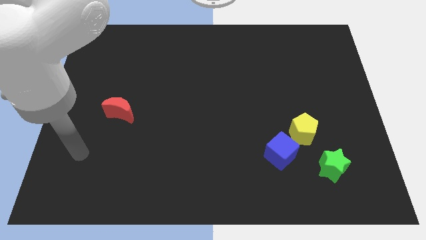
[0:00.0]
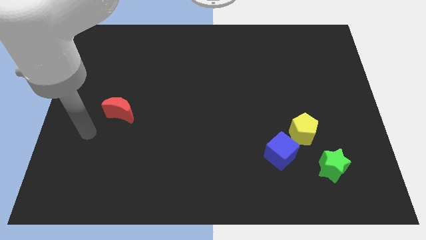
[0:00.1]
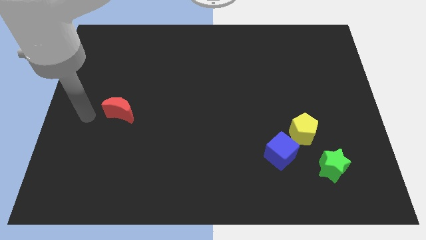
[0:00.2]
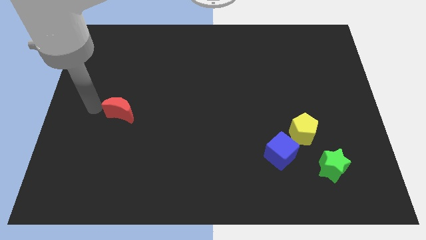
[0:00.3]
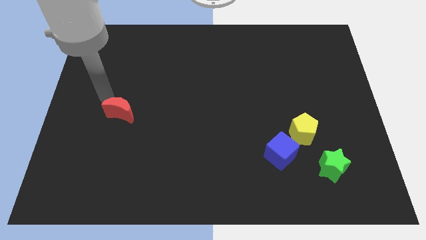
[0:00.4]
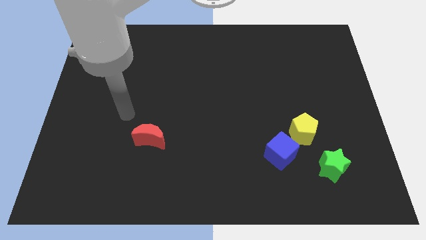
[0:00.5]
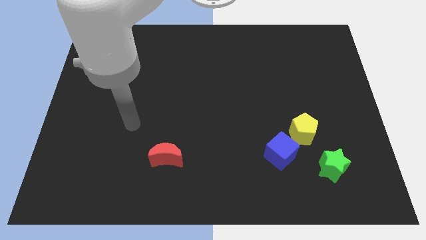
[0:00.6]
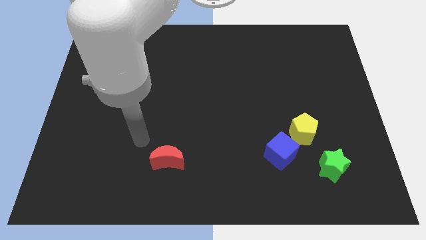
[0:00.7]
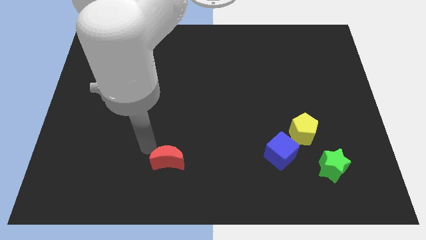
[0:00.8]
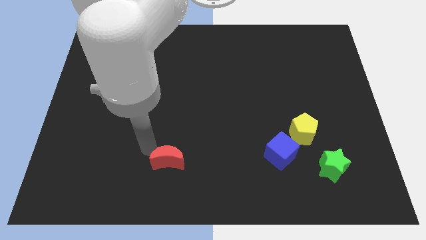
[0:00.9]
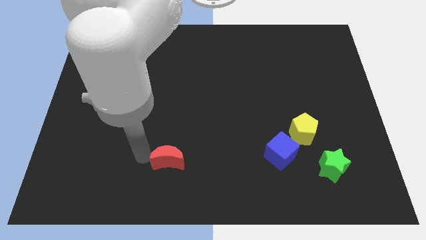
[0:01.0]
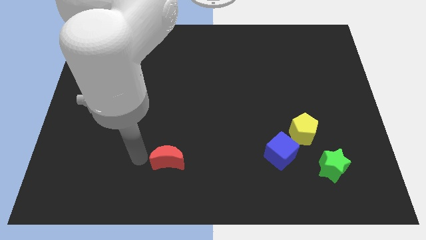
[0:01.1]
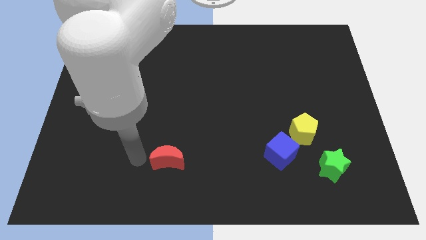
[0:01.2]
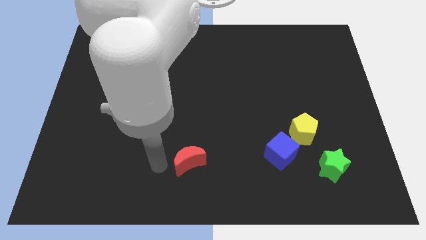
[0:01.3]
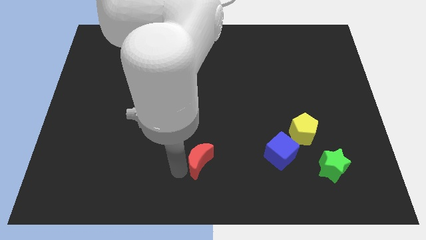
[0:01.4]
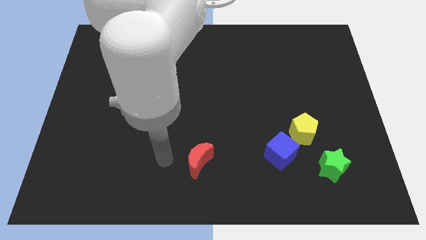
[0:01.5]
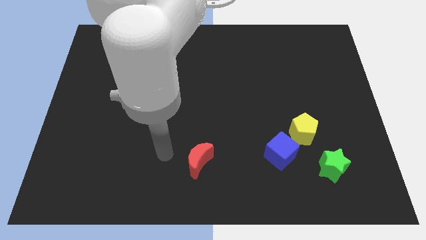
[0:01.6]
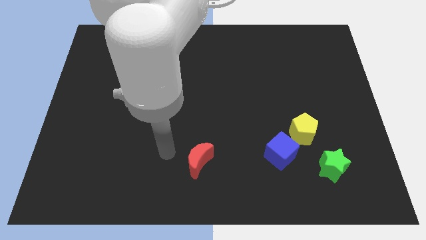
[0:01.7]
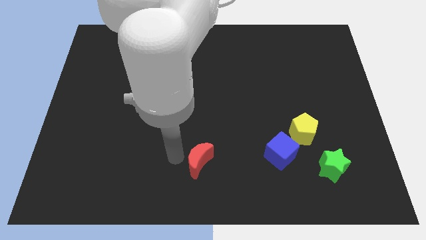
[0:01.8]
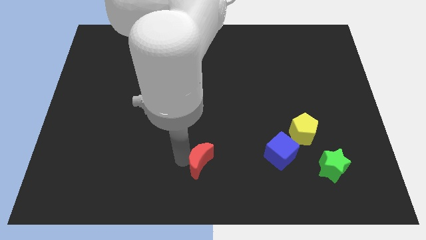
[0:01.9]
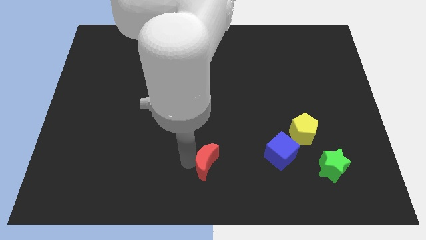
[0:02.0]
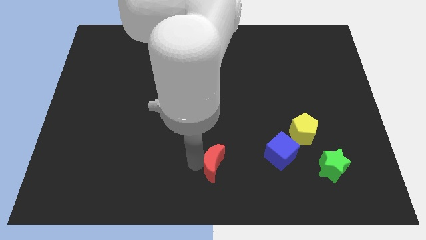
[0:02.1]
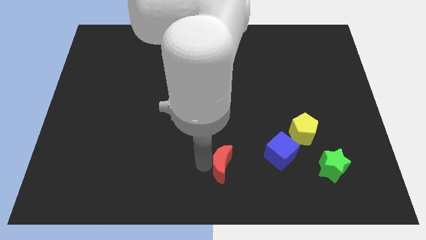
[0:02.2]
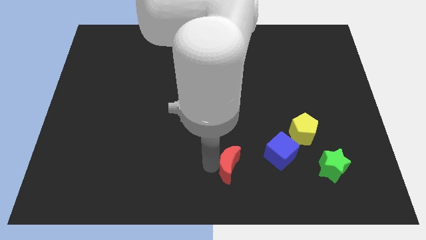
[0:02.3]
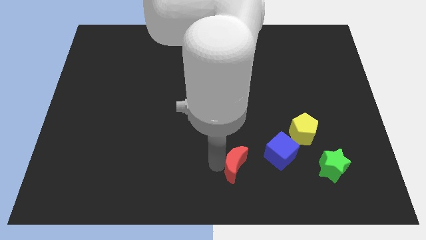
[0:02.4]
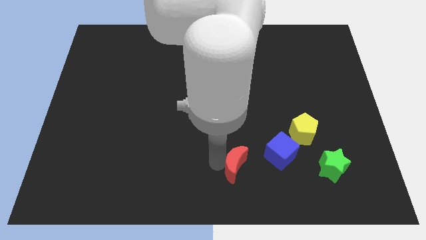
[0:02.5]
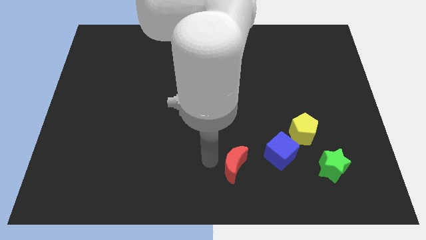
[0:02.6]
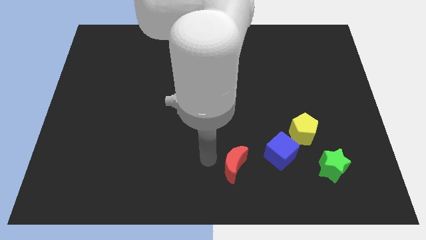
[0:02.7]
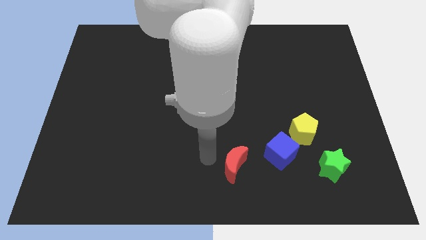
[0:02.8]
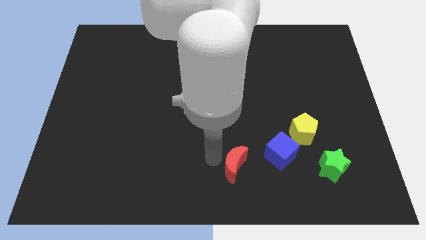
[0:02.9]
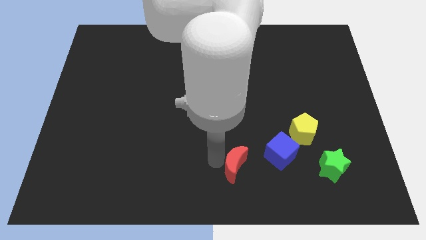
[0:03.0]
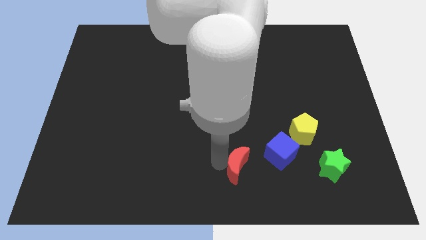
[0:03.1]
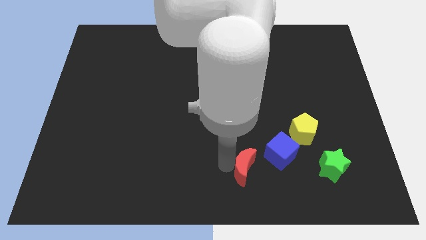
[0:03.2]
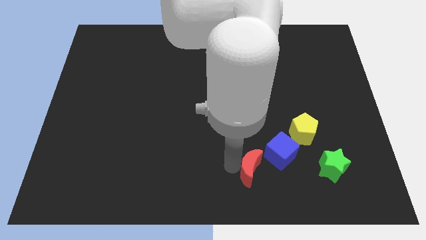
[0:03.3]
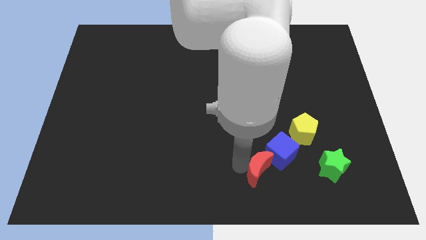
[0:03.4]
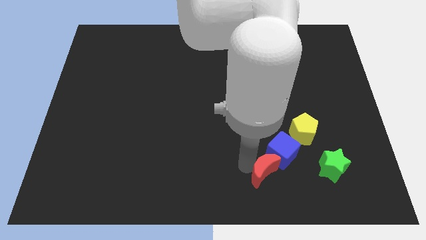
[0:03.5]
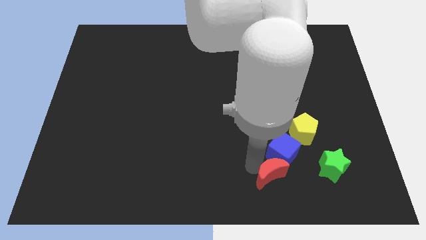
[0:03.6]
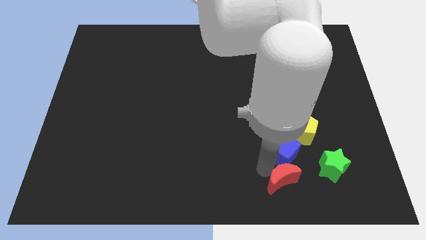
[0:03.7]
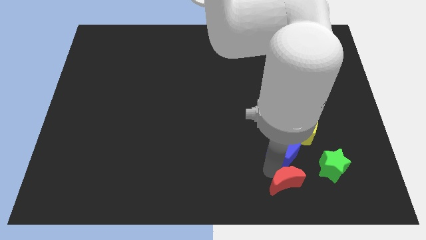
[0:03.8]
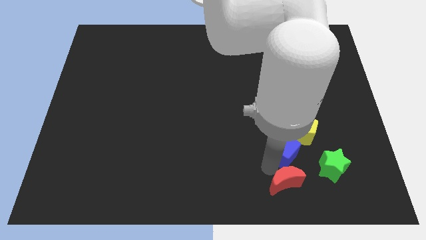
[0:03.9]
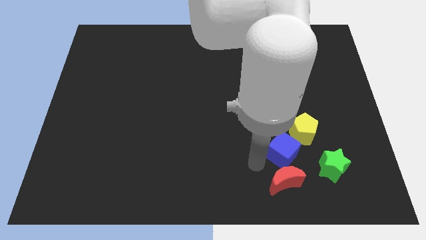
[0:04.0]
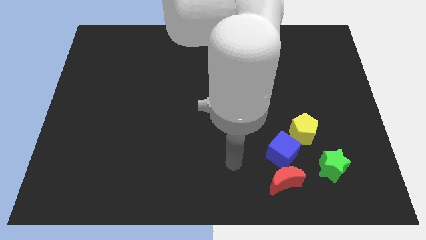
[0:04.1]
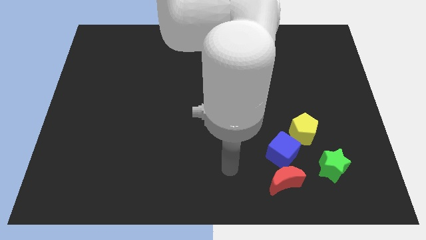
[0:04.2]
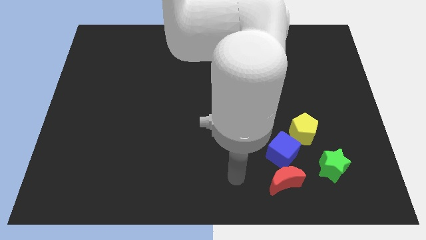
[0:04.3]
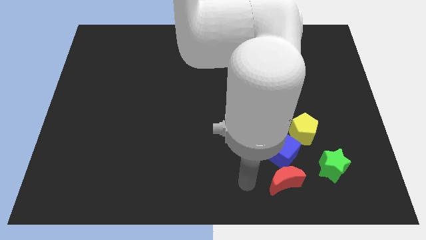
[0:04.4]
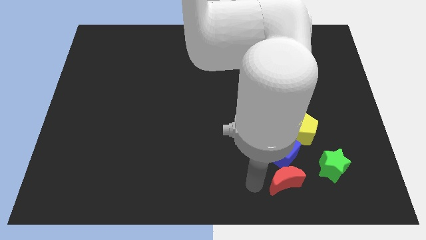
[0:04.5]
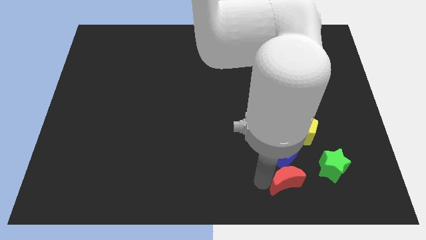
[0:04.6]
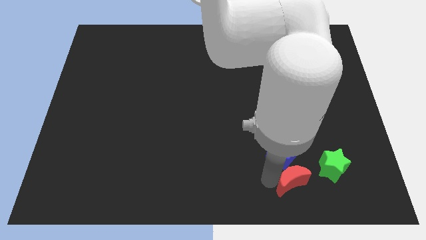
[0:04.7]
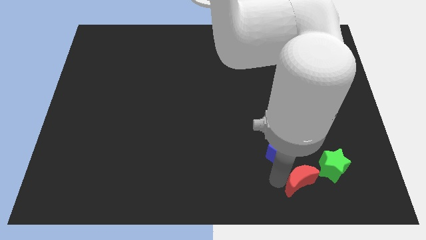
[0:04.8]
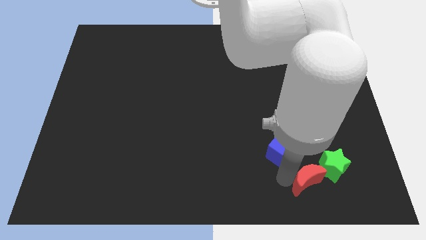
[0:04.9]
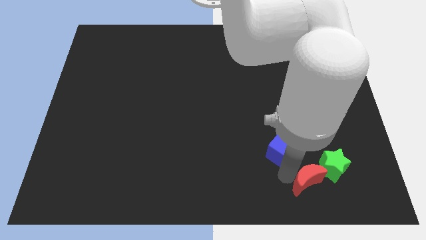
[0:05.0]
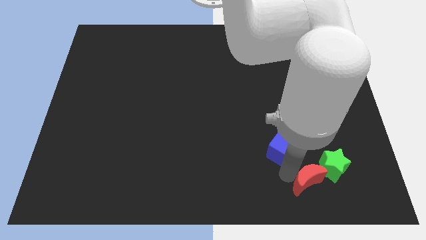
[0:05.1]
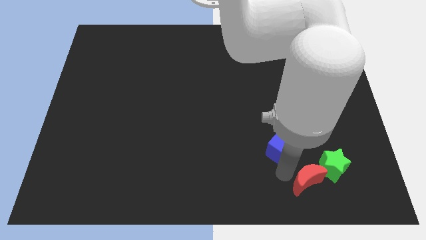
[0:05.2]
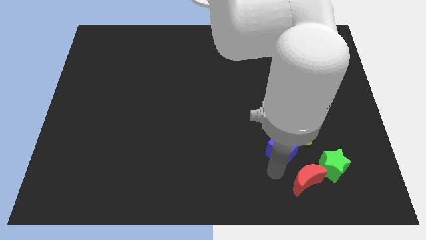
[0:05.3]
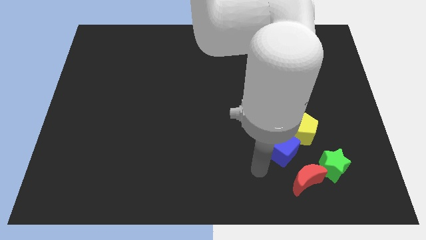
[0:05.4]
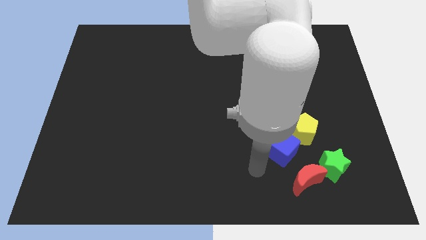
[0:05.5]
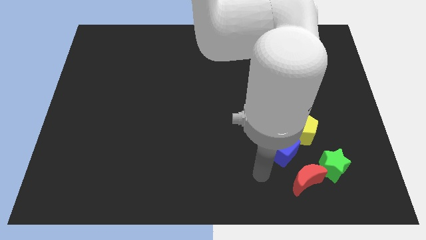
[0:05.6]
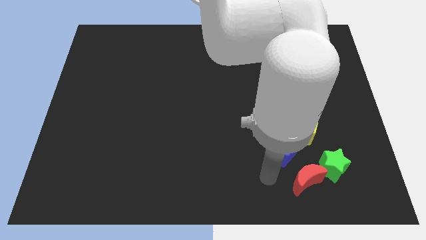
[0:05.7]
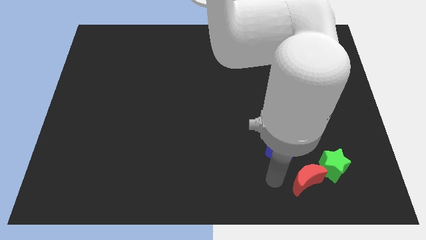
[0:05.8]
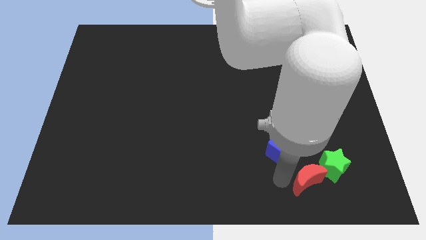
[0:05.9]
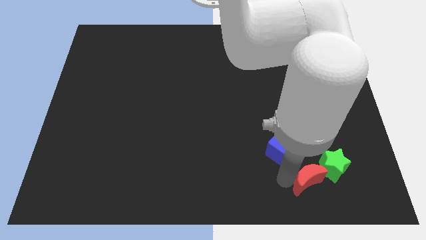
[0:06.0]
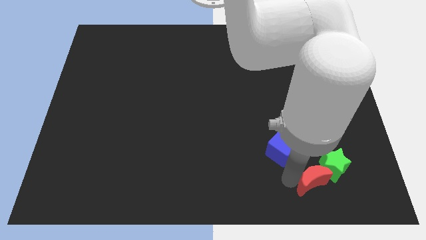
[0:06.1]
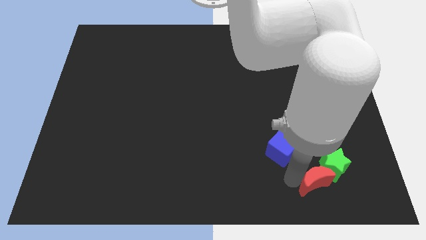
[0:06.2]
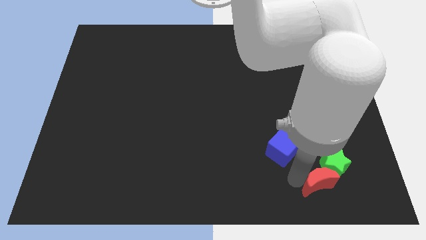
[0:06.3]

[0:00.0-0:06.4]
push the moon close to the star

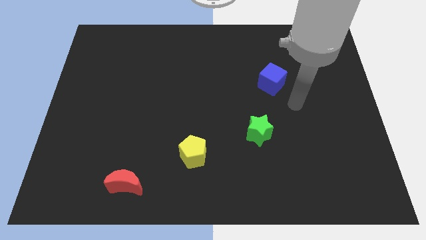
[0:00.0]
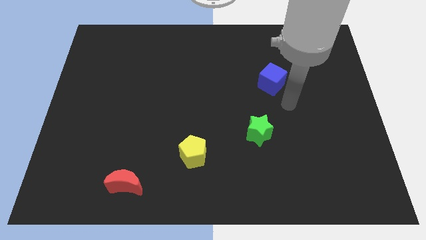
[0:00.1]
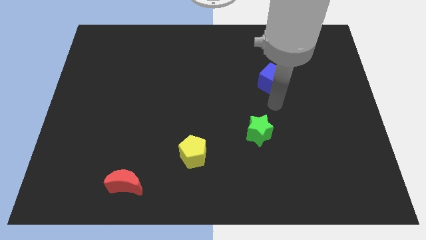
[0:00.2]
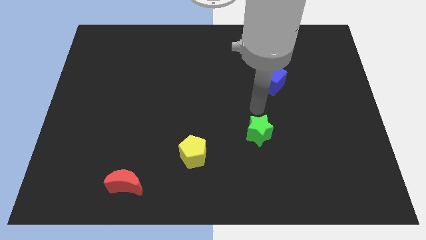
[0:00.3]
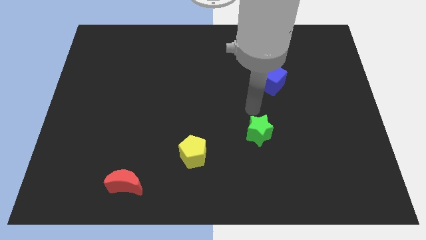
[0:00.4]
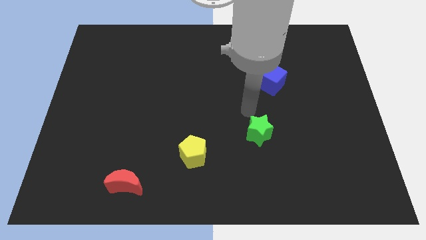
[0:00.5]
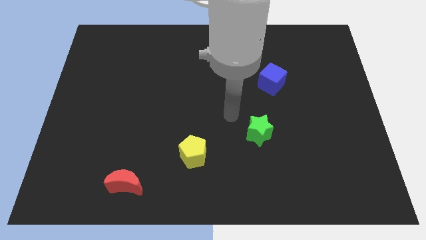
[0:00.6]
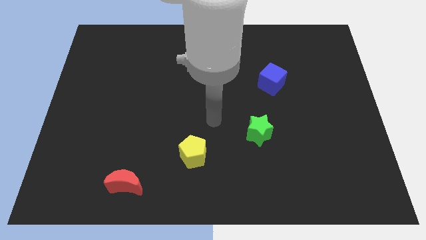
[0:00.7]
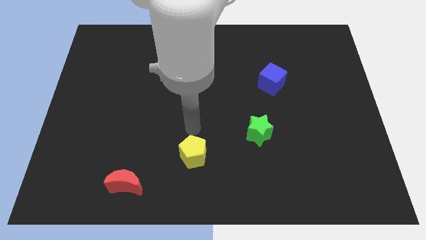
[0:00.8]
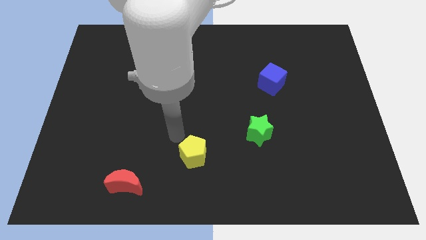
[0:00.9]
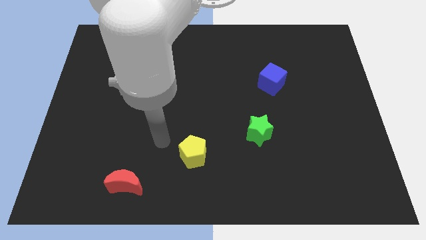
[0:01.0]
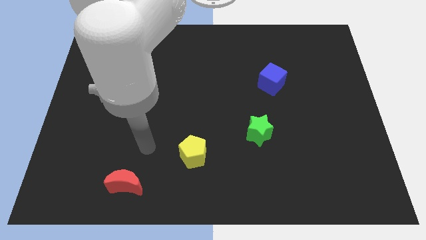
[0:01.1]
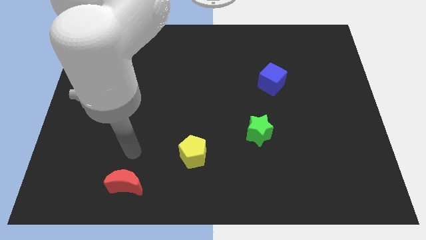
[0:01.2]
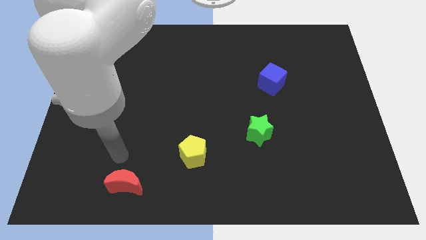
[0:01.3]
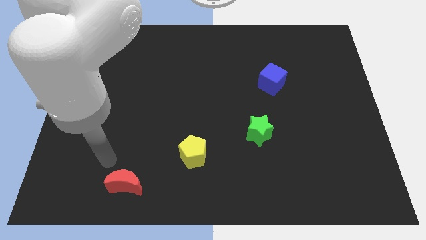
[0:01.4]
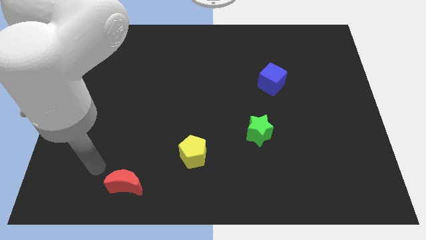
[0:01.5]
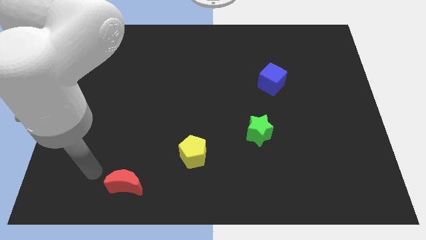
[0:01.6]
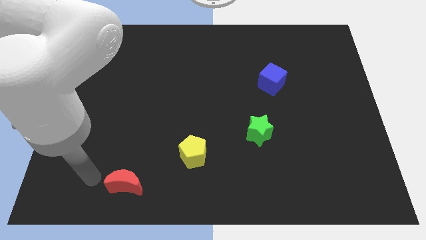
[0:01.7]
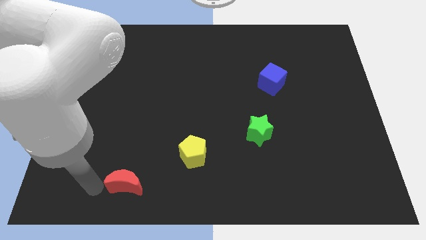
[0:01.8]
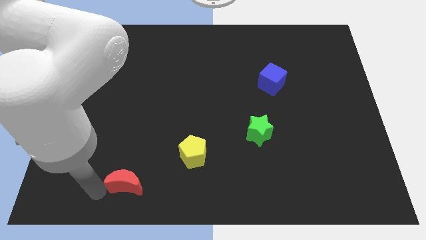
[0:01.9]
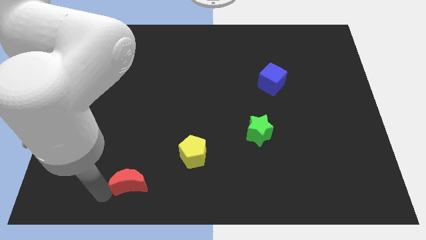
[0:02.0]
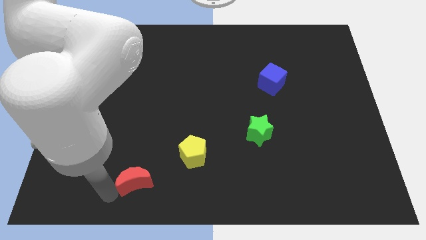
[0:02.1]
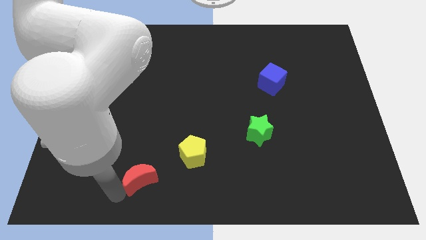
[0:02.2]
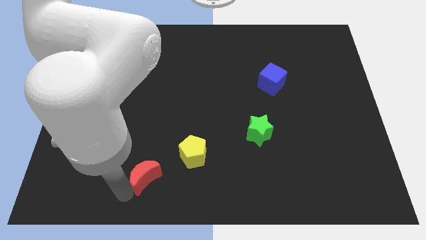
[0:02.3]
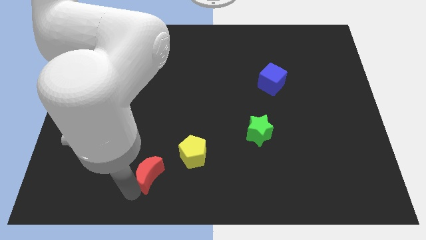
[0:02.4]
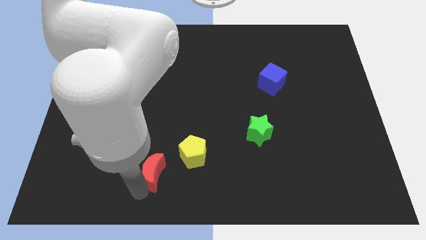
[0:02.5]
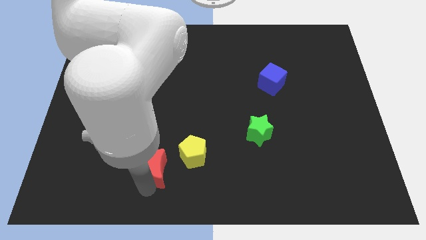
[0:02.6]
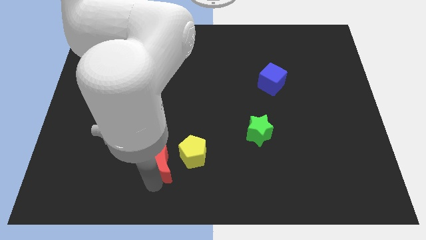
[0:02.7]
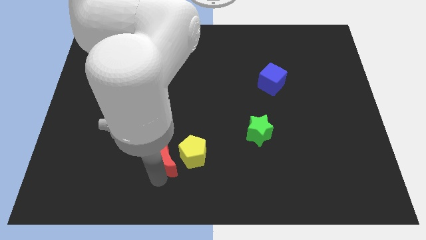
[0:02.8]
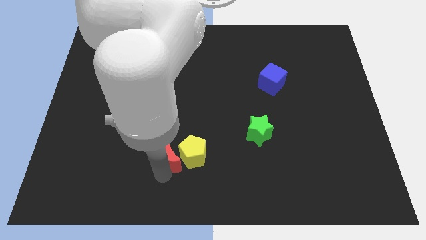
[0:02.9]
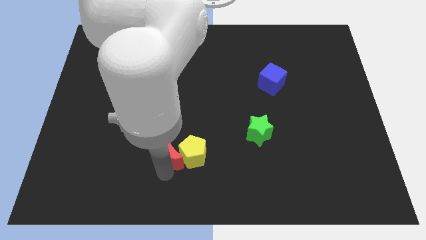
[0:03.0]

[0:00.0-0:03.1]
put the red moon close to the yellow block
